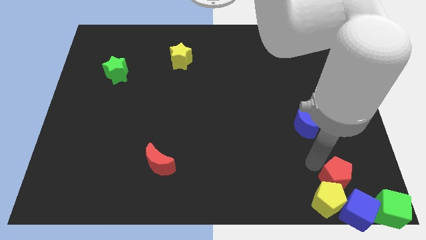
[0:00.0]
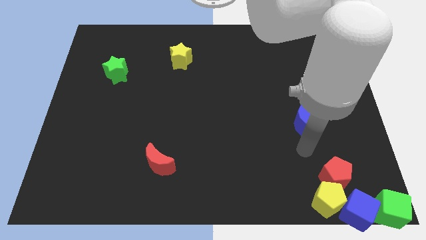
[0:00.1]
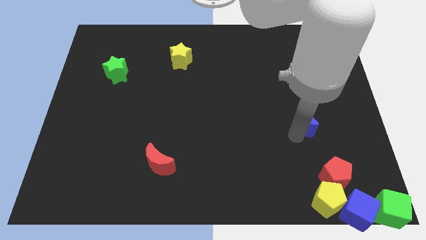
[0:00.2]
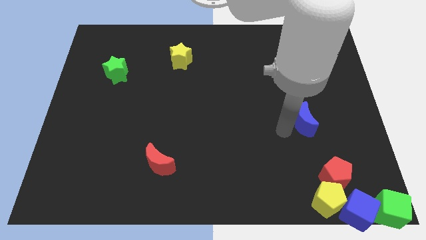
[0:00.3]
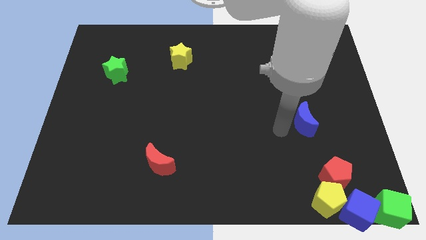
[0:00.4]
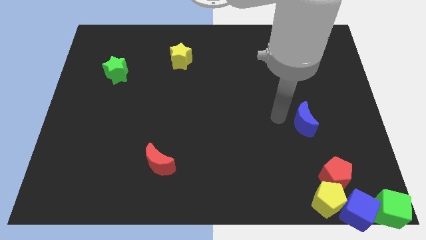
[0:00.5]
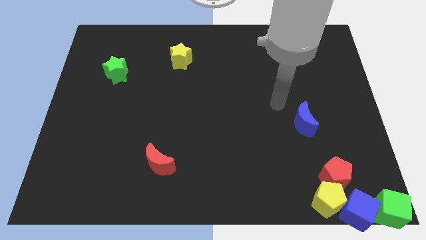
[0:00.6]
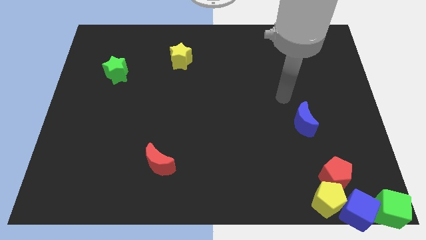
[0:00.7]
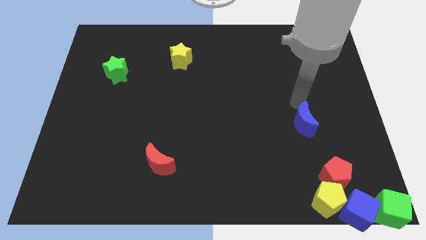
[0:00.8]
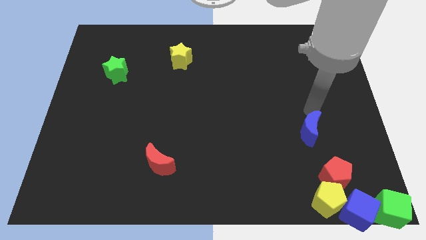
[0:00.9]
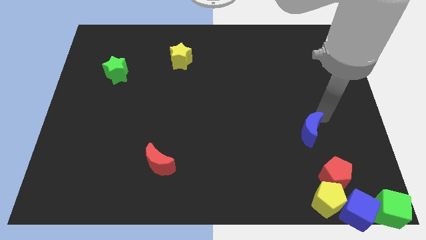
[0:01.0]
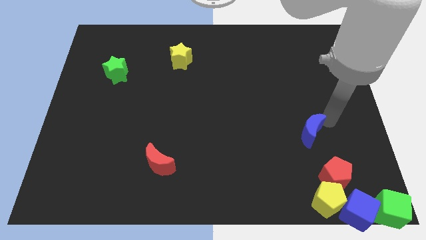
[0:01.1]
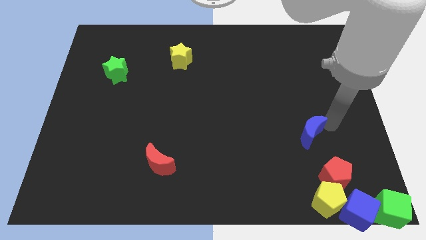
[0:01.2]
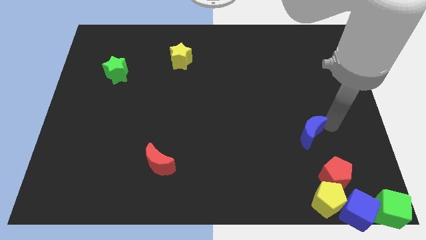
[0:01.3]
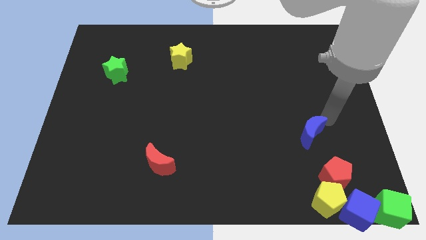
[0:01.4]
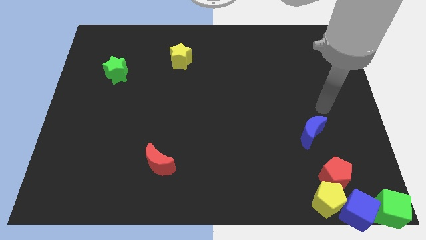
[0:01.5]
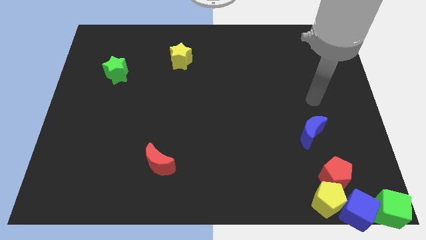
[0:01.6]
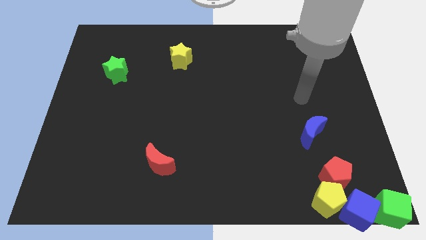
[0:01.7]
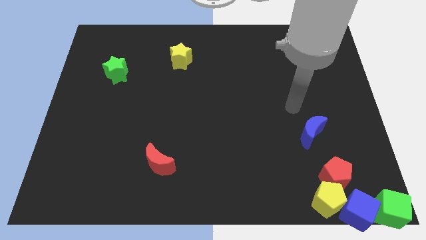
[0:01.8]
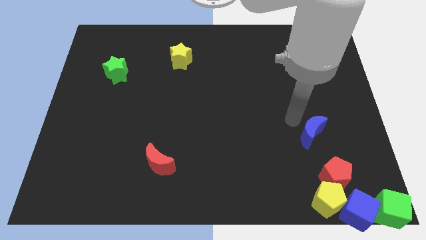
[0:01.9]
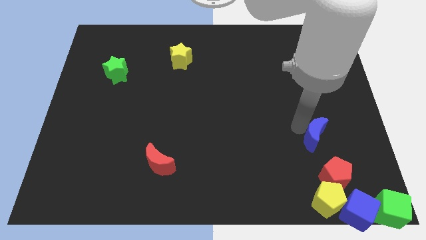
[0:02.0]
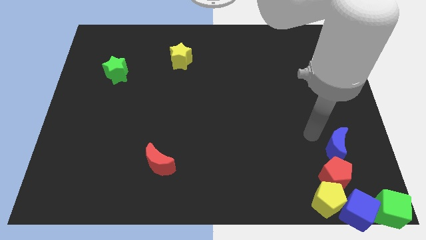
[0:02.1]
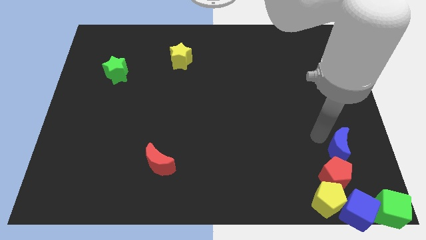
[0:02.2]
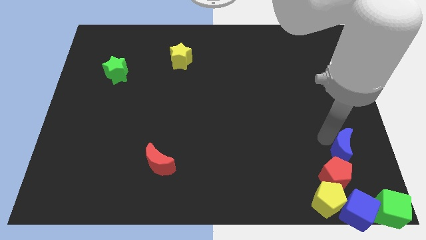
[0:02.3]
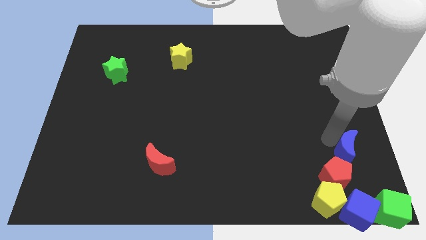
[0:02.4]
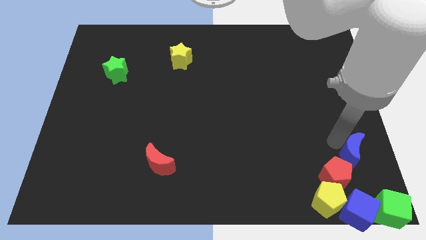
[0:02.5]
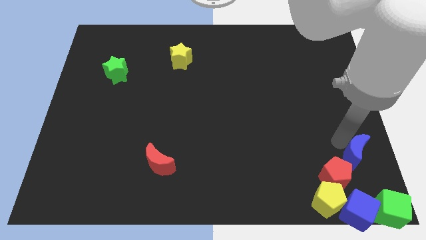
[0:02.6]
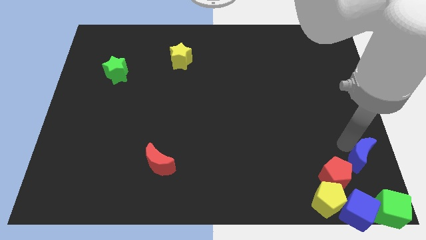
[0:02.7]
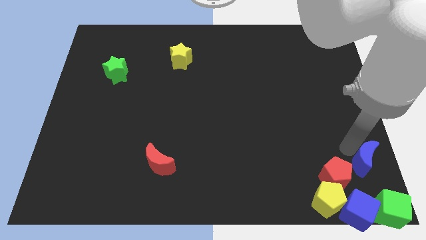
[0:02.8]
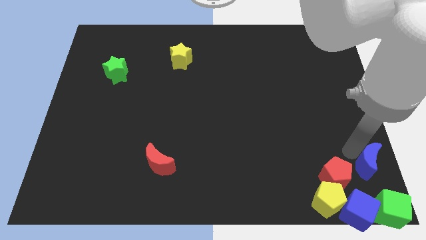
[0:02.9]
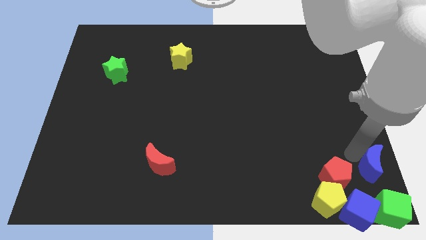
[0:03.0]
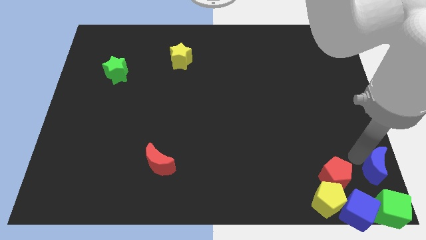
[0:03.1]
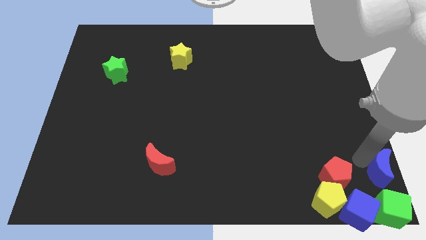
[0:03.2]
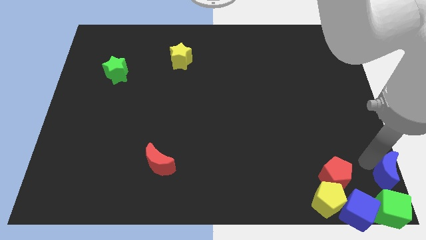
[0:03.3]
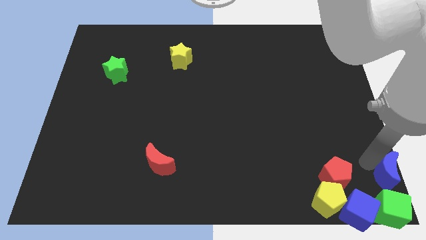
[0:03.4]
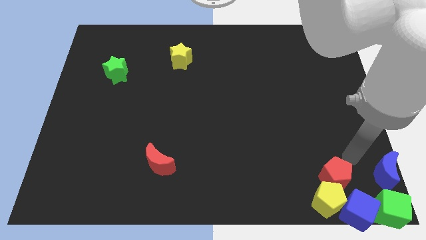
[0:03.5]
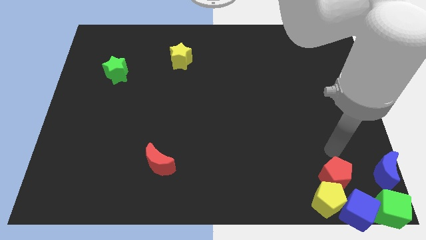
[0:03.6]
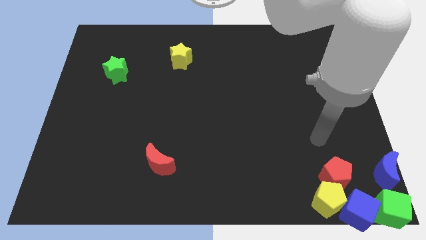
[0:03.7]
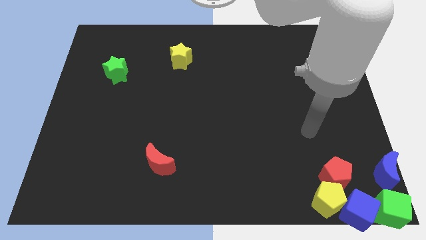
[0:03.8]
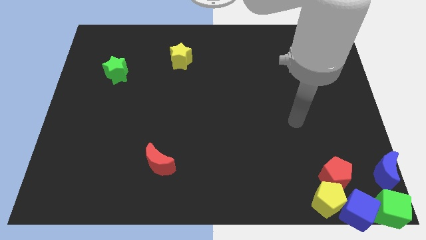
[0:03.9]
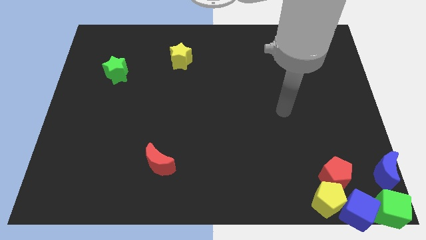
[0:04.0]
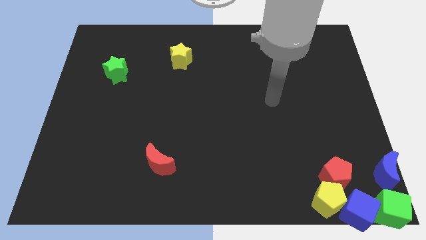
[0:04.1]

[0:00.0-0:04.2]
place the blue crescent above the green cube

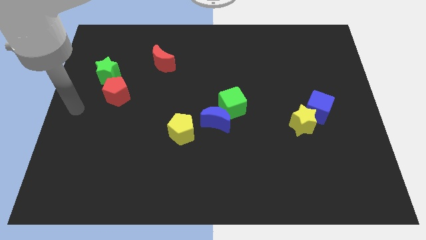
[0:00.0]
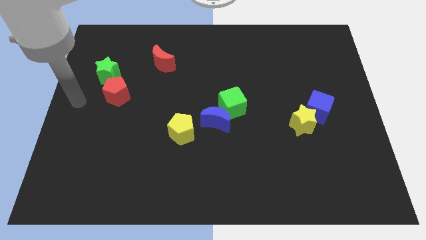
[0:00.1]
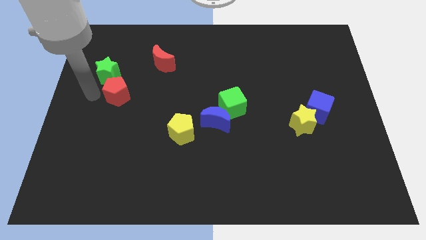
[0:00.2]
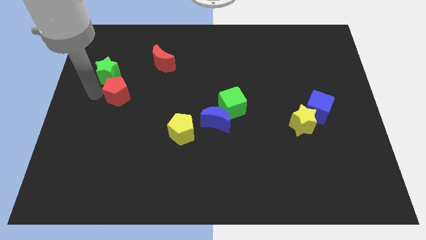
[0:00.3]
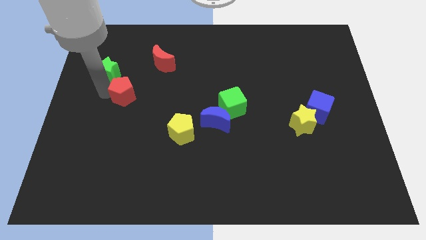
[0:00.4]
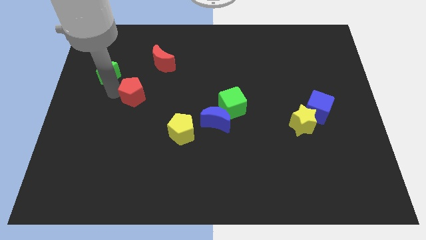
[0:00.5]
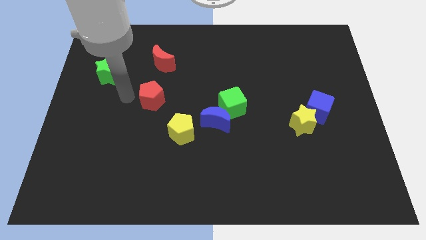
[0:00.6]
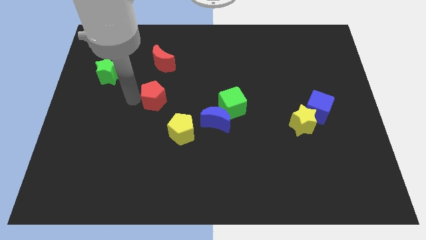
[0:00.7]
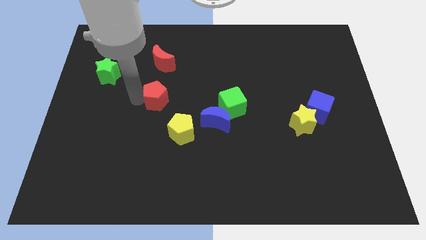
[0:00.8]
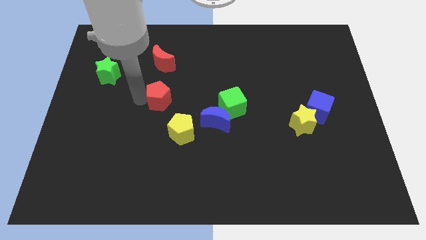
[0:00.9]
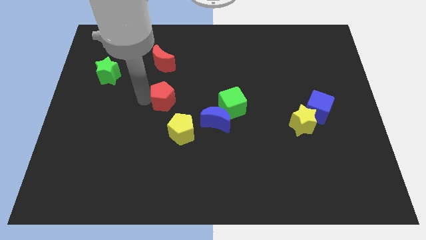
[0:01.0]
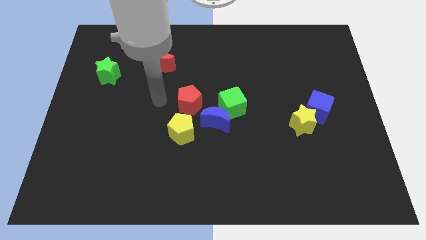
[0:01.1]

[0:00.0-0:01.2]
push the red pentagon towards right side

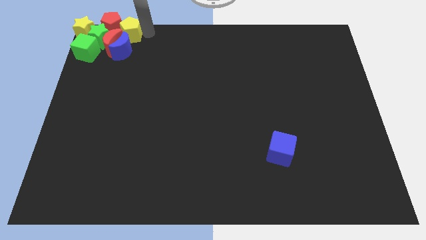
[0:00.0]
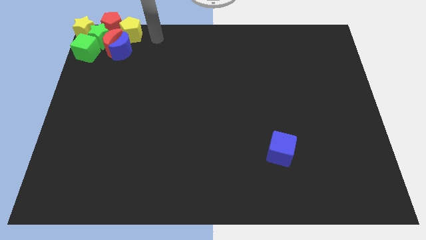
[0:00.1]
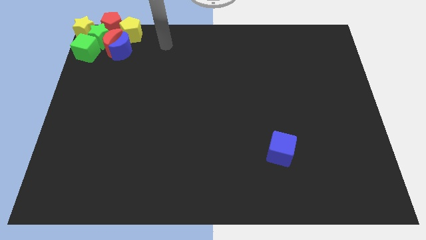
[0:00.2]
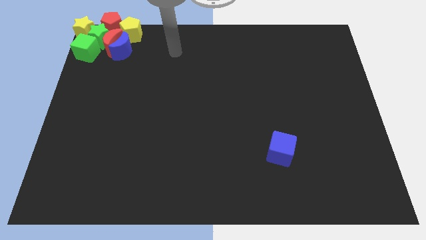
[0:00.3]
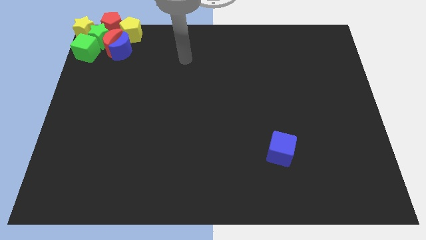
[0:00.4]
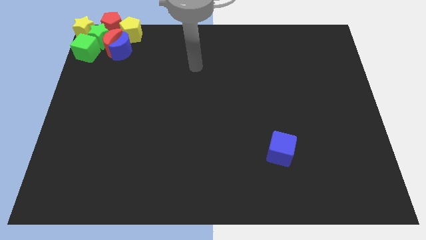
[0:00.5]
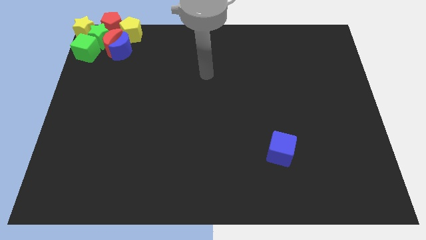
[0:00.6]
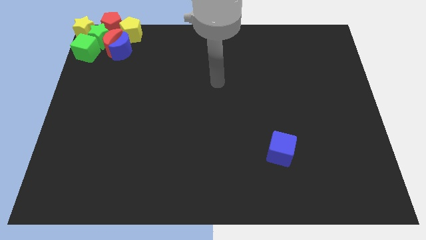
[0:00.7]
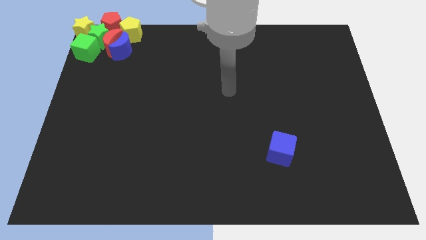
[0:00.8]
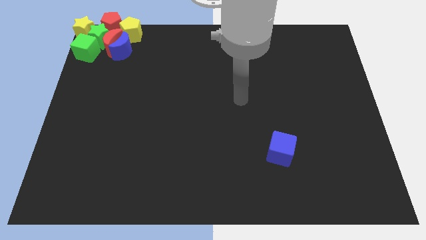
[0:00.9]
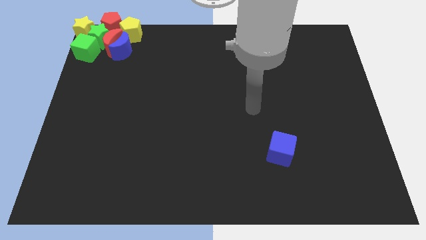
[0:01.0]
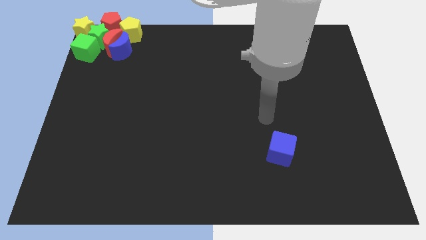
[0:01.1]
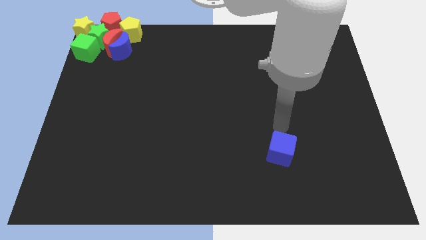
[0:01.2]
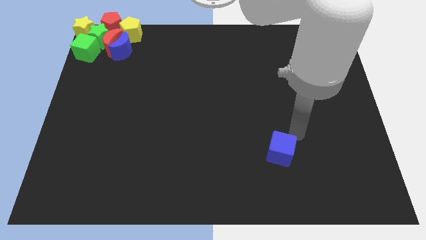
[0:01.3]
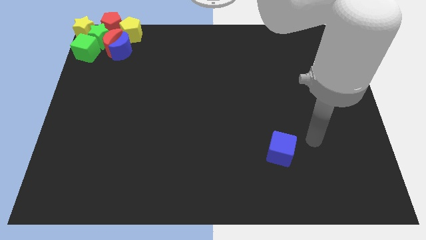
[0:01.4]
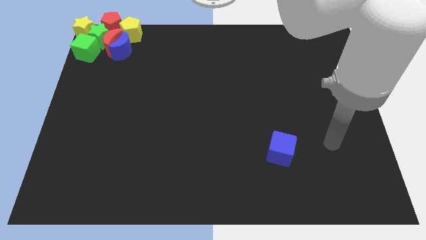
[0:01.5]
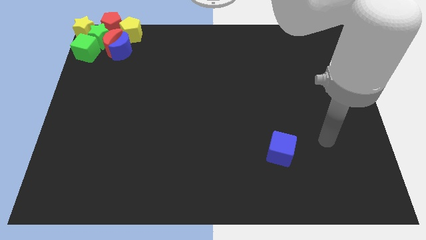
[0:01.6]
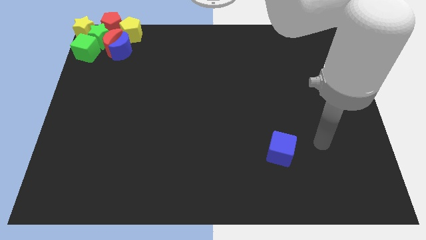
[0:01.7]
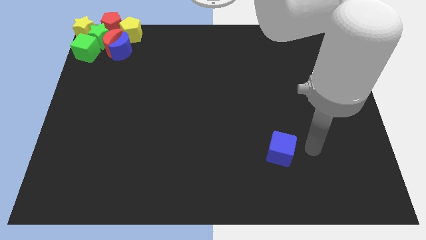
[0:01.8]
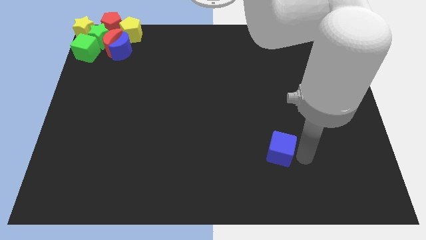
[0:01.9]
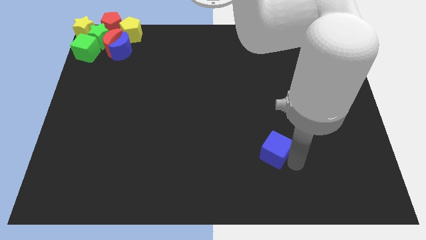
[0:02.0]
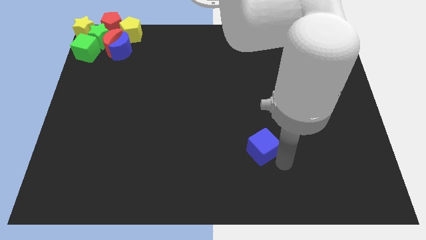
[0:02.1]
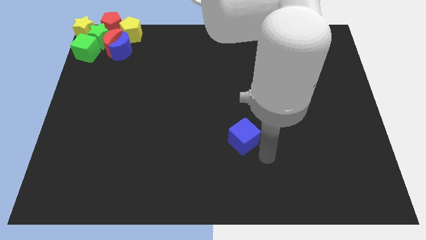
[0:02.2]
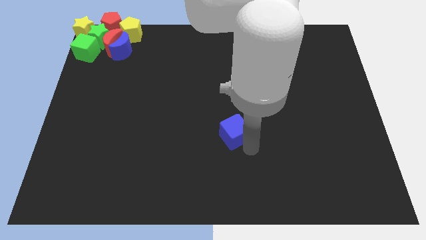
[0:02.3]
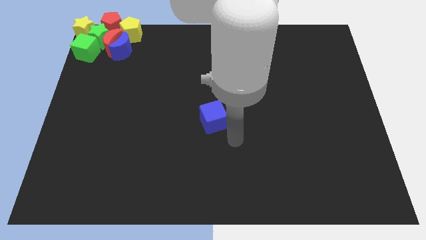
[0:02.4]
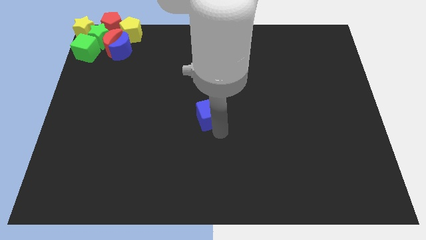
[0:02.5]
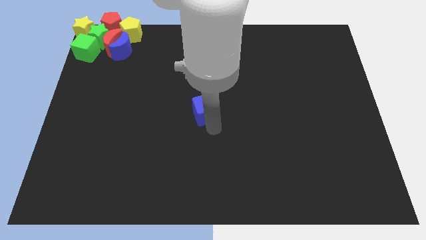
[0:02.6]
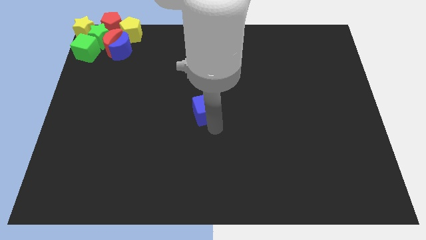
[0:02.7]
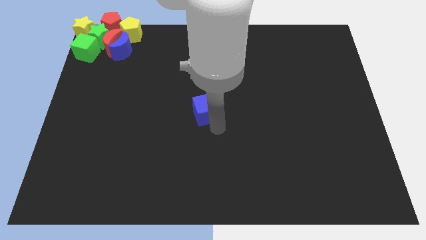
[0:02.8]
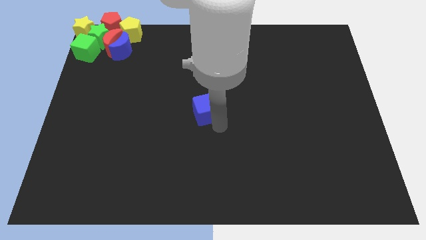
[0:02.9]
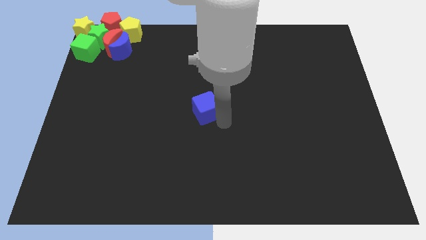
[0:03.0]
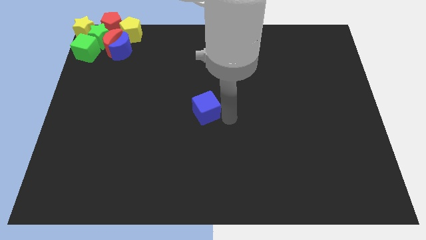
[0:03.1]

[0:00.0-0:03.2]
move the blue cube into the center of the board

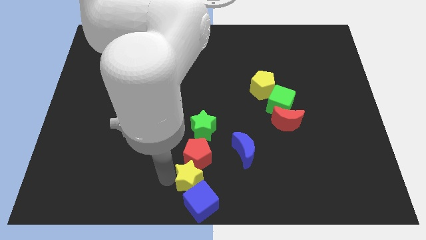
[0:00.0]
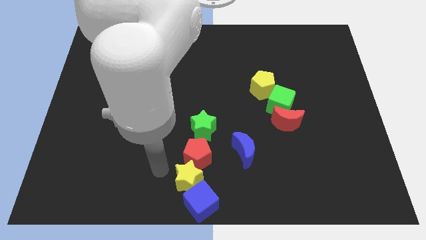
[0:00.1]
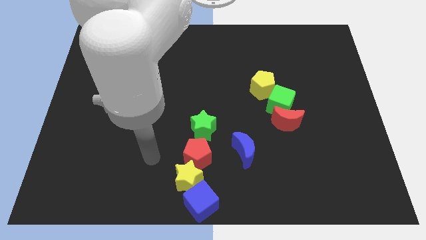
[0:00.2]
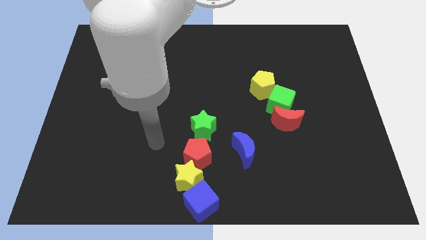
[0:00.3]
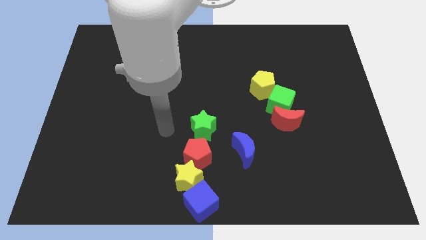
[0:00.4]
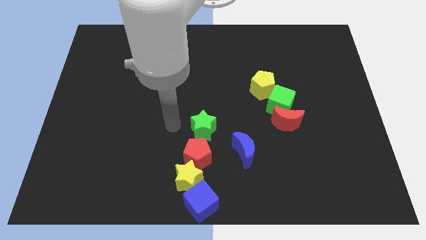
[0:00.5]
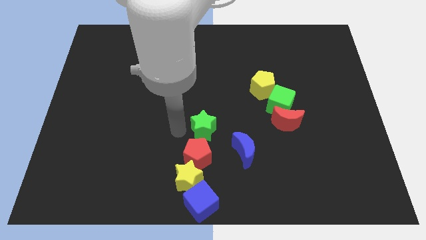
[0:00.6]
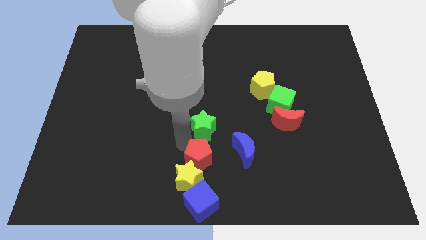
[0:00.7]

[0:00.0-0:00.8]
move yellow star at the bottom of red pentagon
